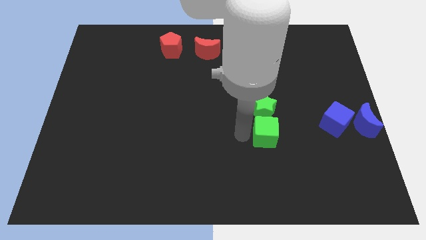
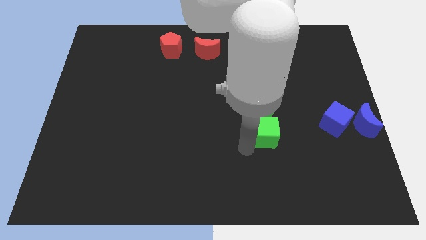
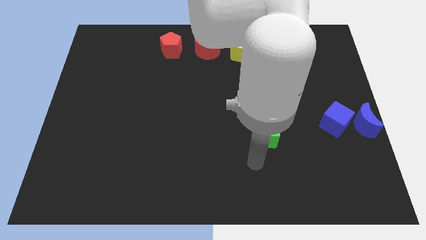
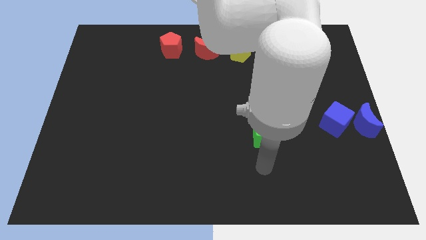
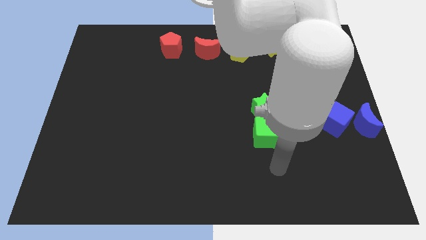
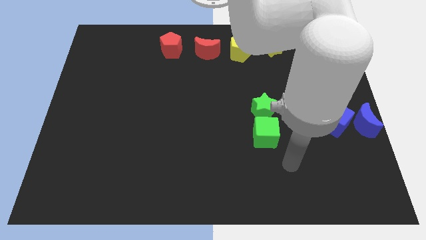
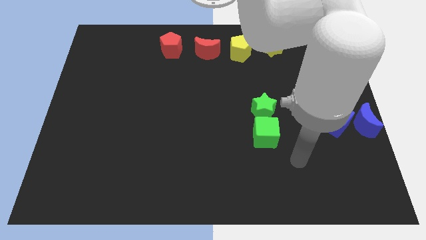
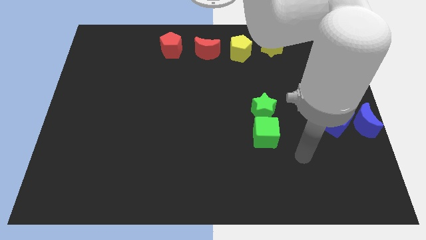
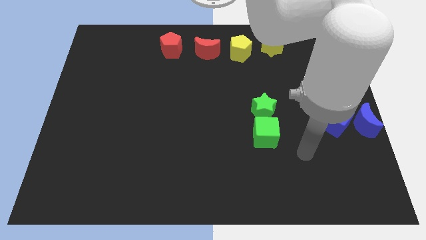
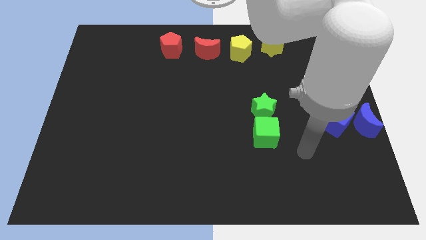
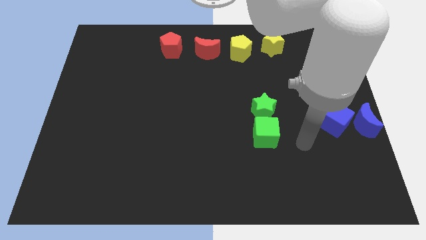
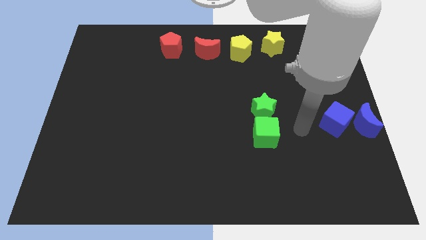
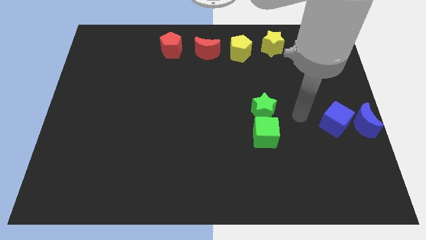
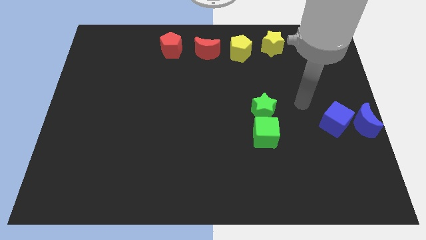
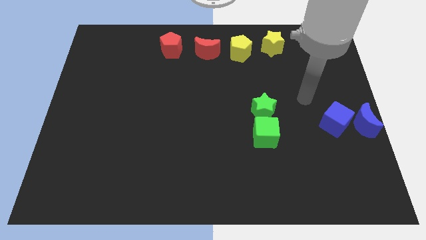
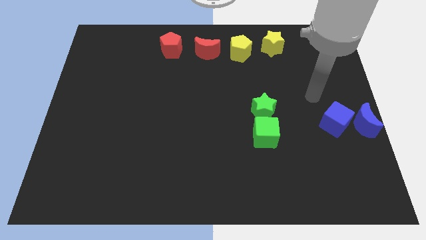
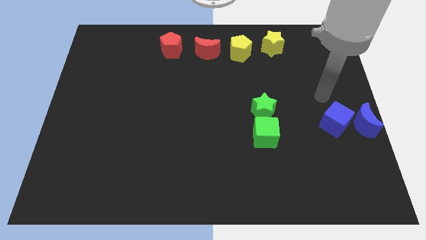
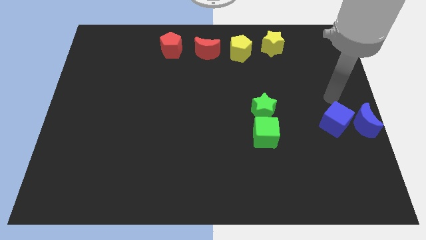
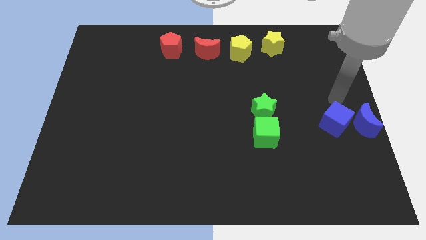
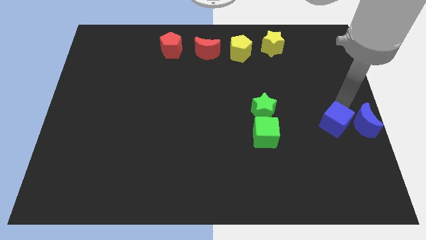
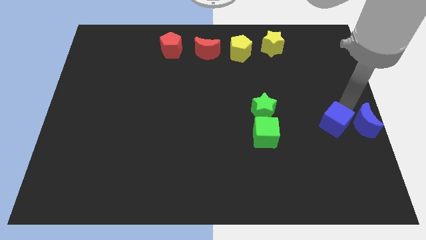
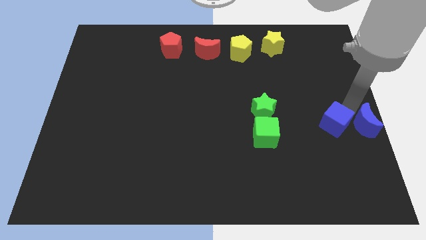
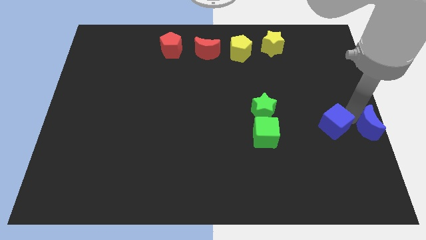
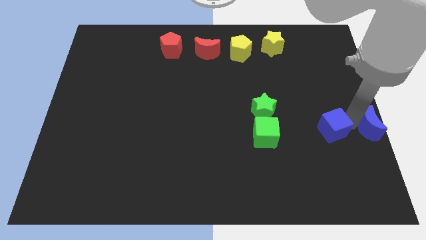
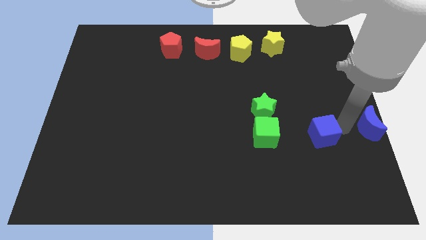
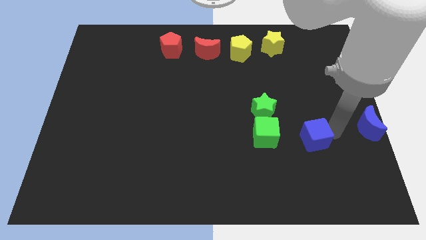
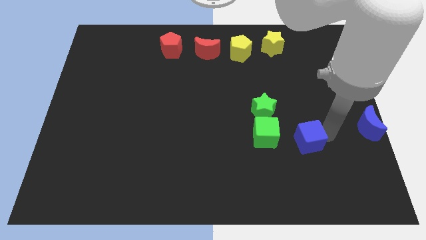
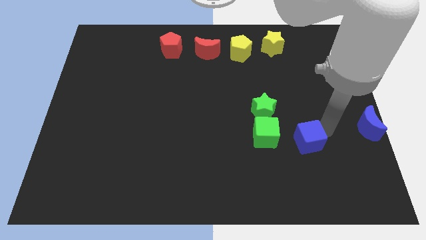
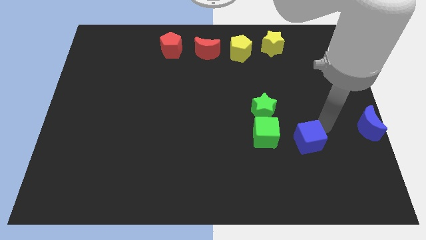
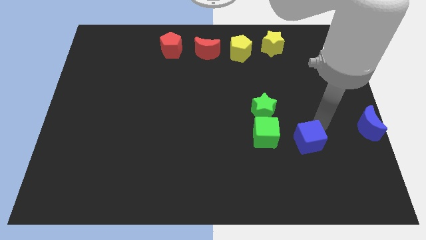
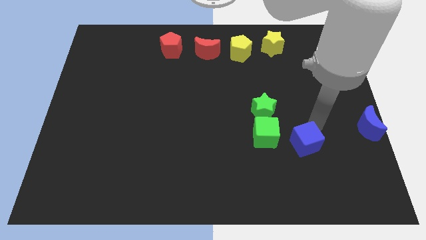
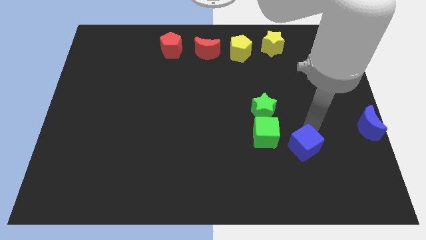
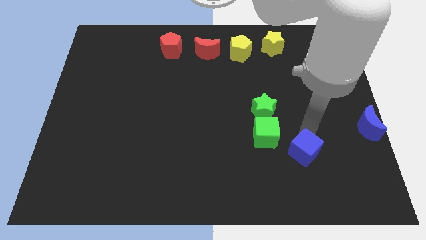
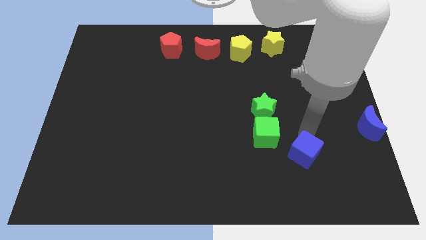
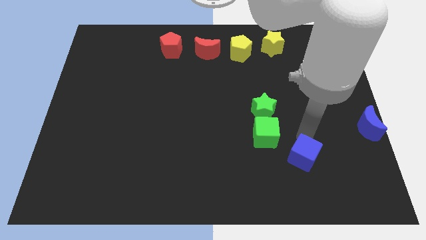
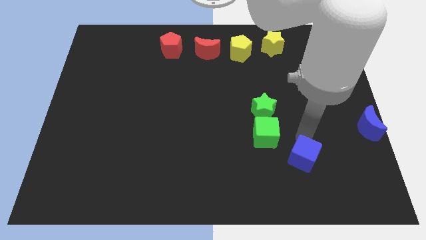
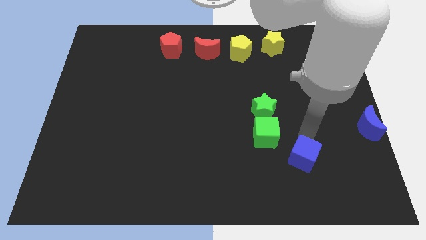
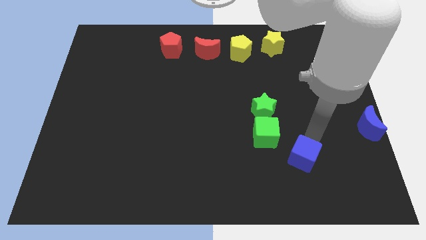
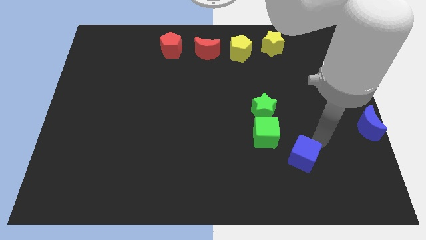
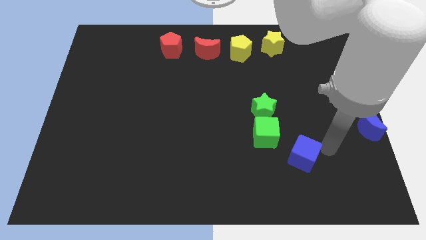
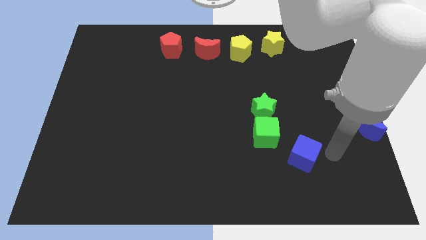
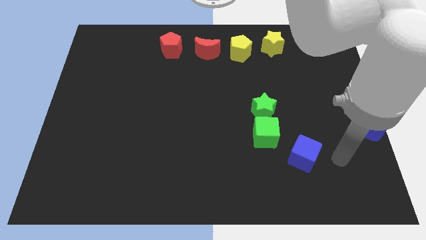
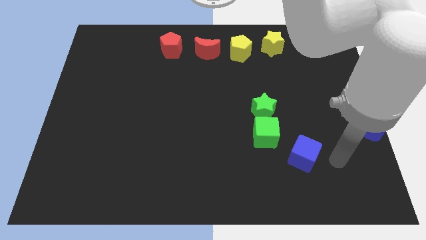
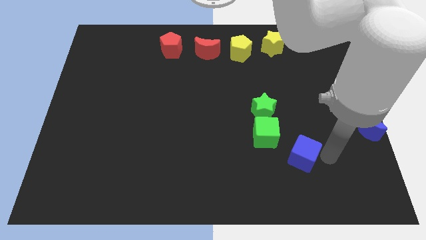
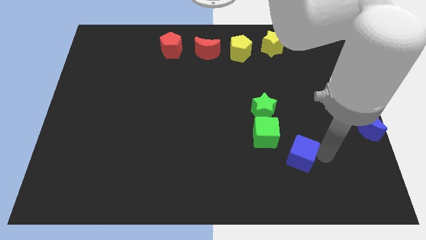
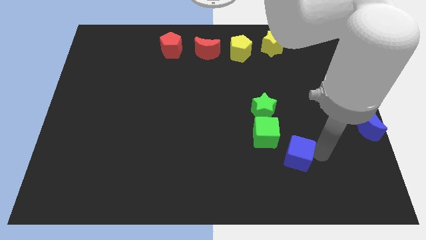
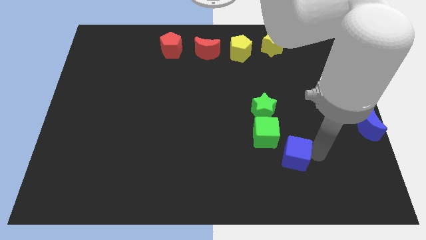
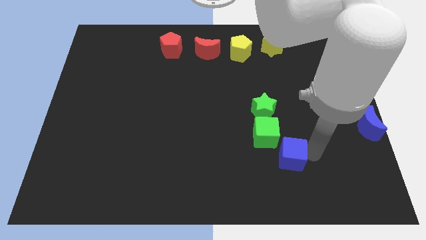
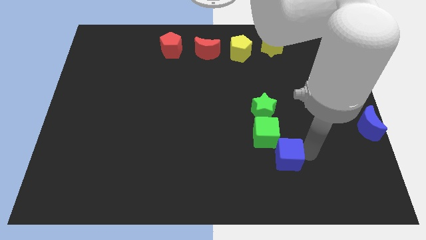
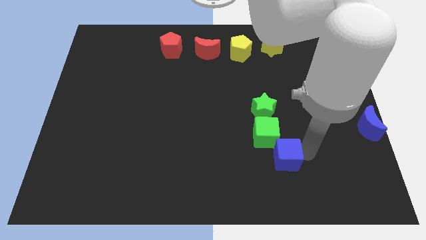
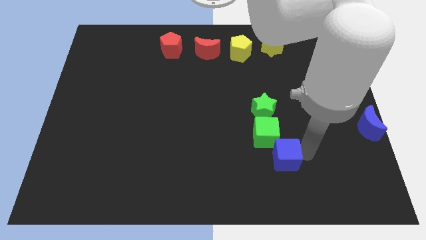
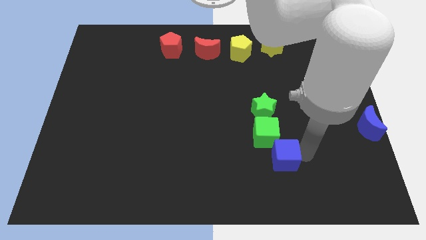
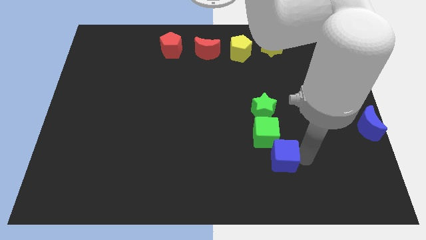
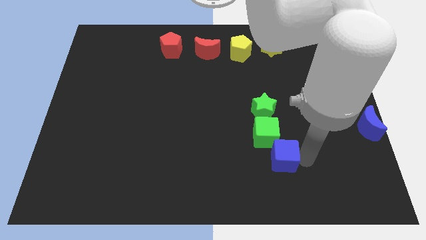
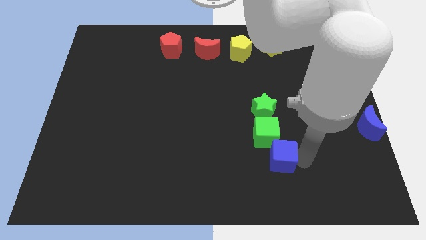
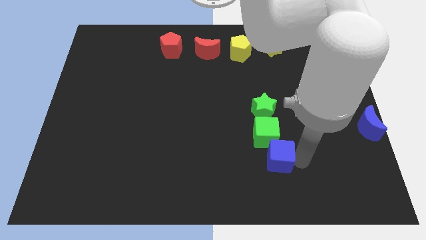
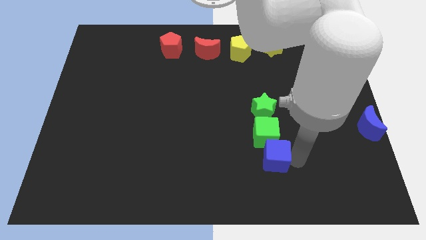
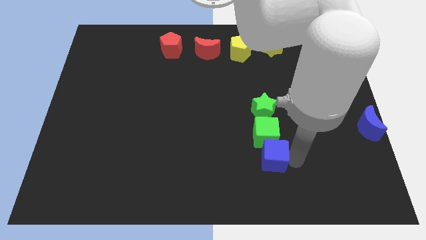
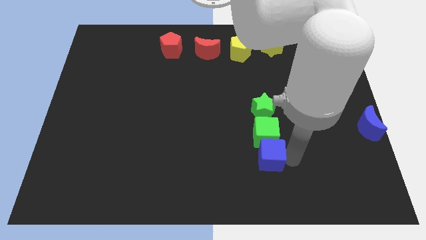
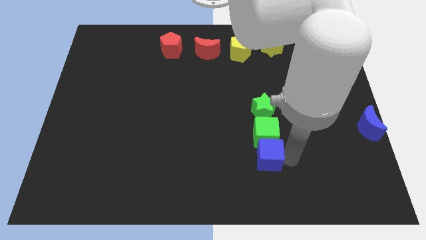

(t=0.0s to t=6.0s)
separate the blue cube from the blue semicircle

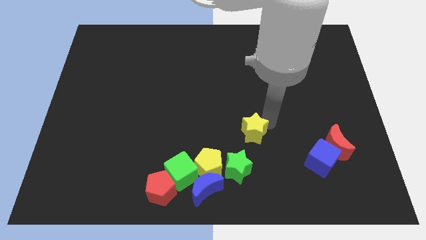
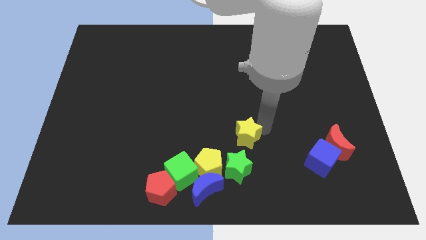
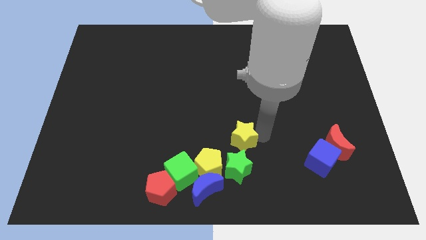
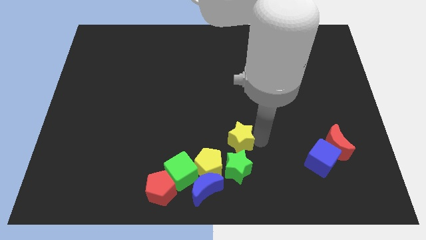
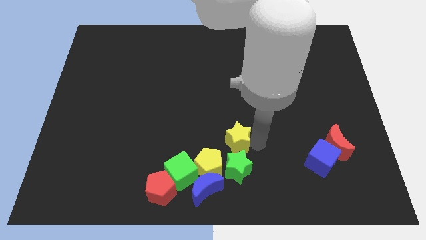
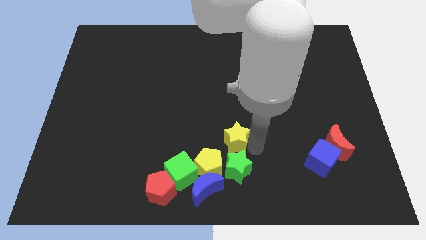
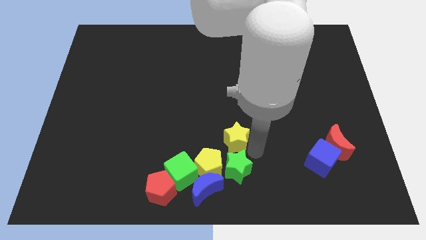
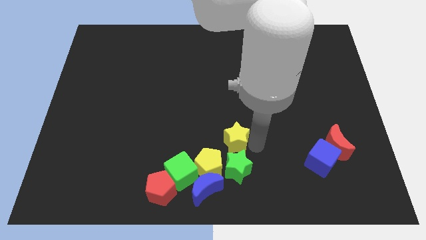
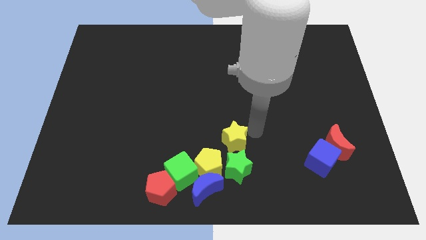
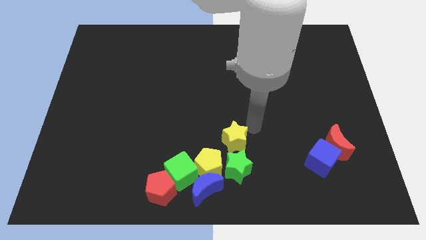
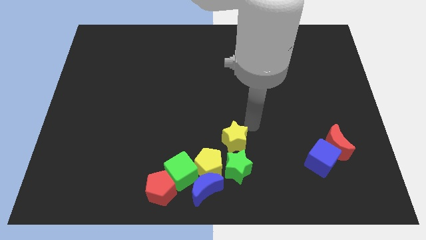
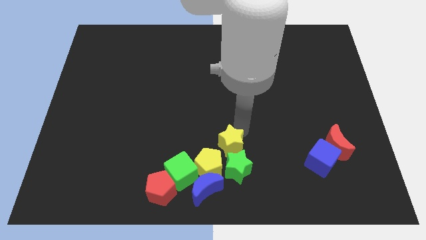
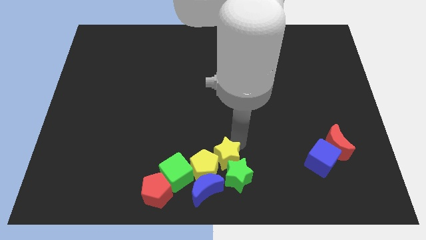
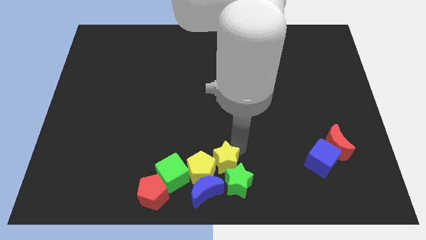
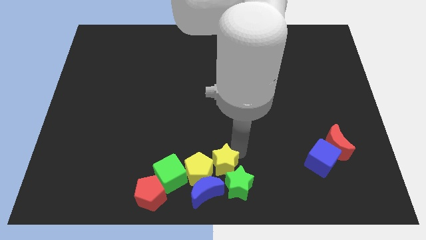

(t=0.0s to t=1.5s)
push the yellow star into the green star

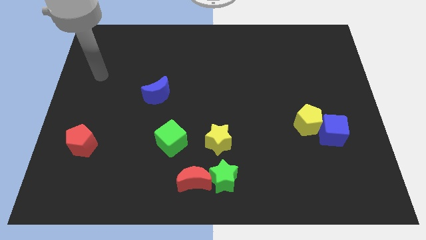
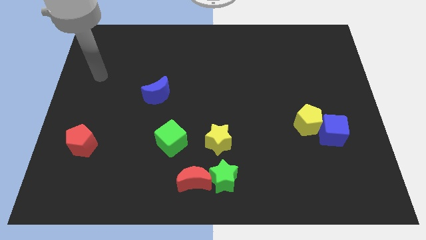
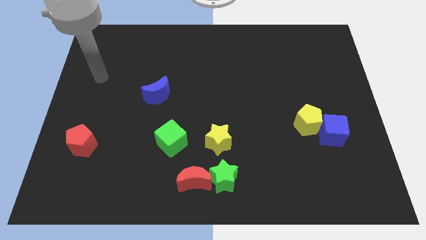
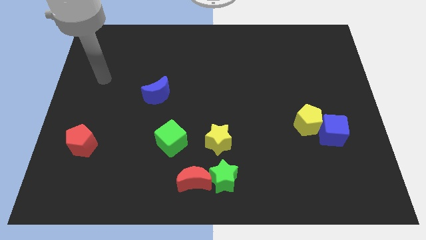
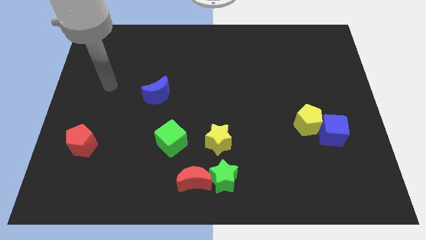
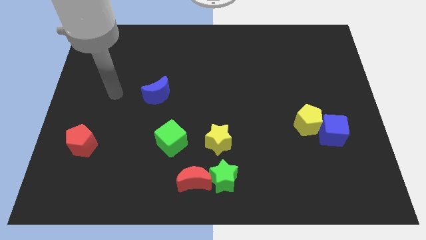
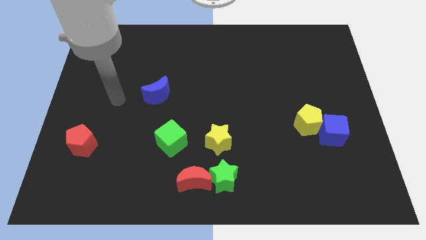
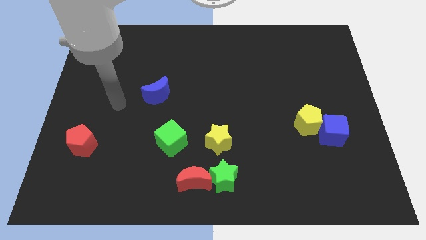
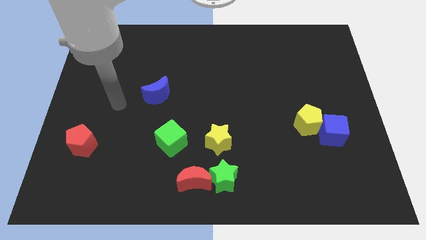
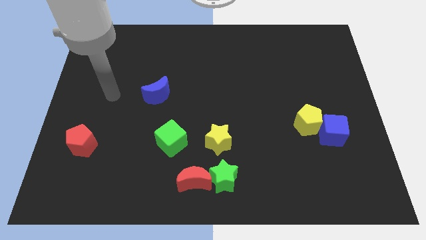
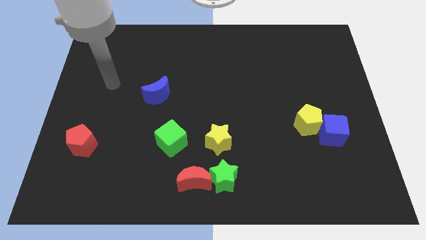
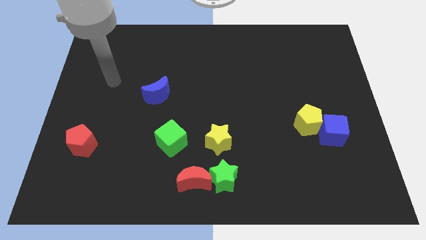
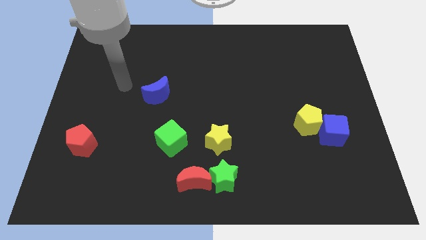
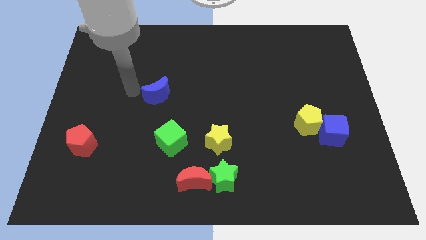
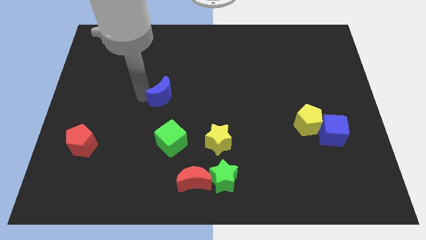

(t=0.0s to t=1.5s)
place arm near the blue moon
